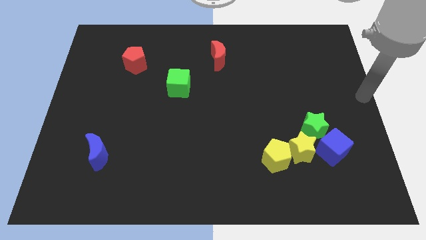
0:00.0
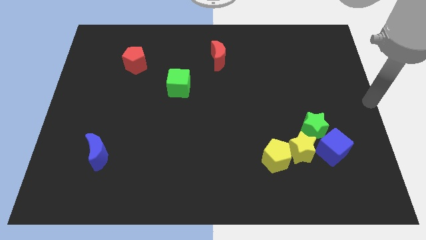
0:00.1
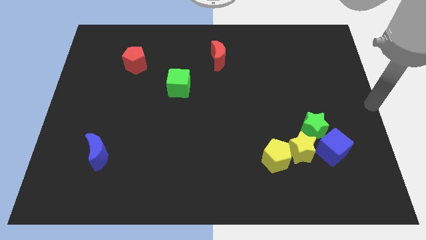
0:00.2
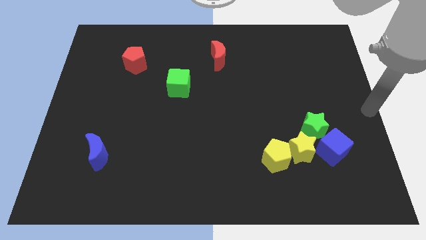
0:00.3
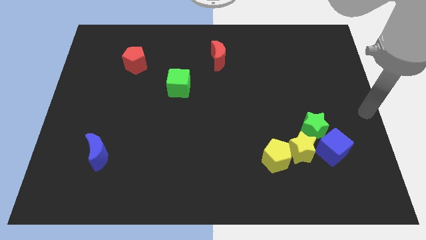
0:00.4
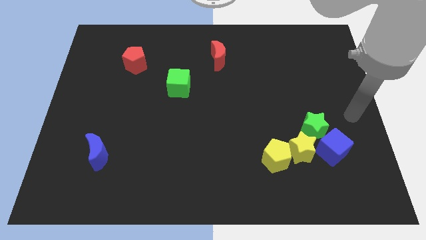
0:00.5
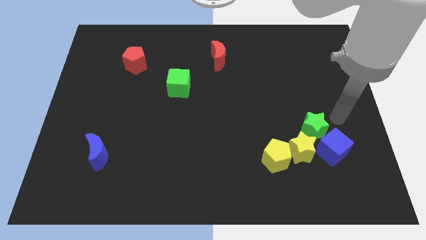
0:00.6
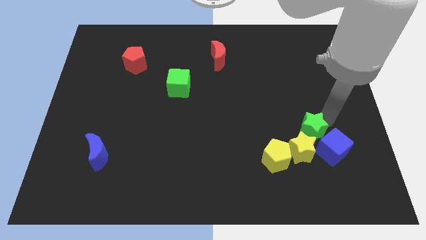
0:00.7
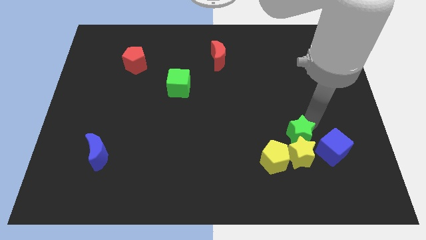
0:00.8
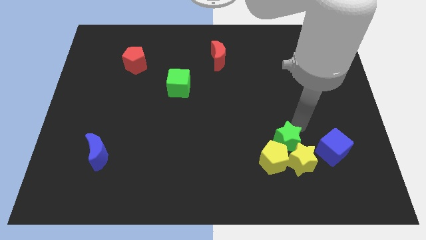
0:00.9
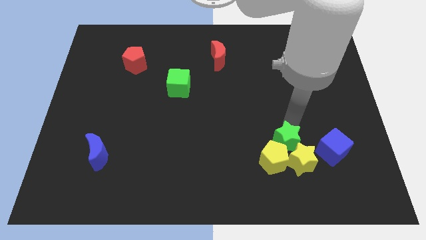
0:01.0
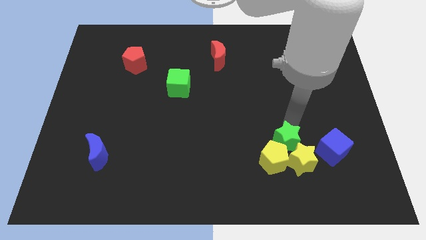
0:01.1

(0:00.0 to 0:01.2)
push the green star into the yellow blocks

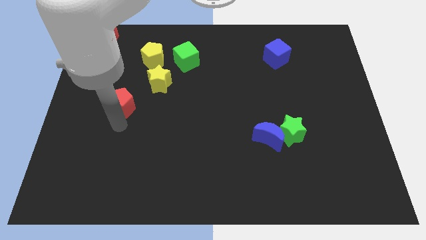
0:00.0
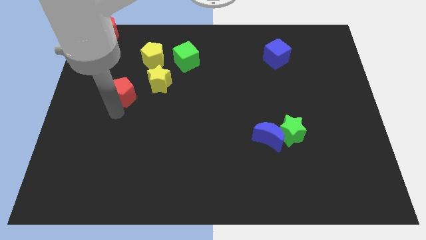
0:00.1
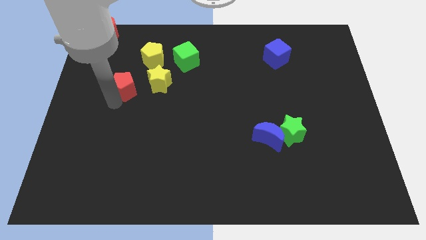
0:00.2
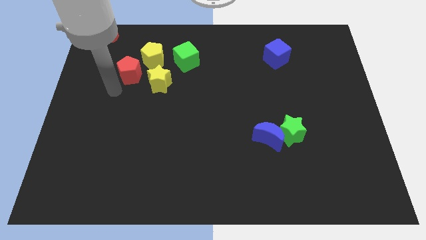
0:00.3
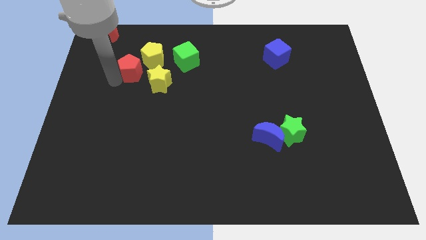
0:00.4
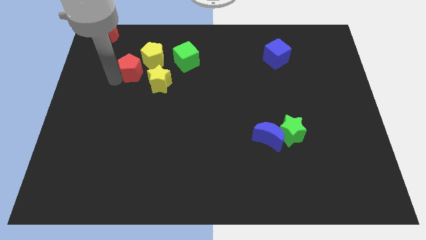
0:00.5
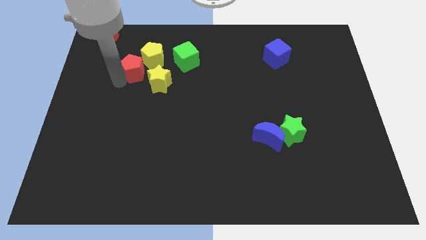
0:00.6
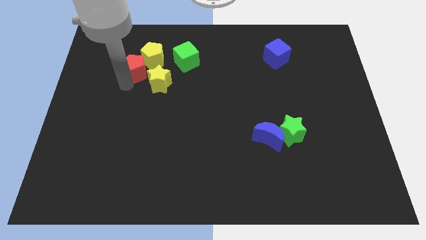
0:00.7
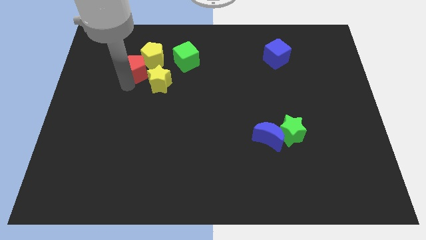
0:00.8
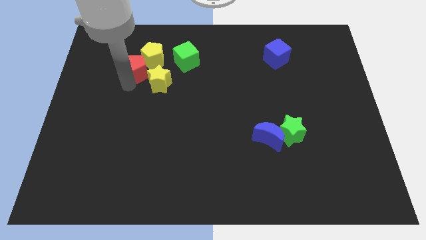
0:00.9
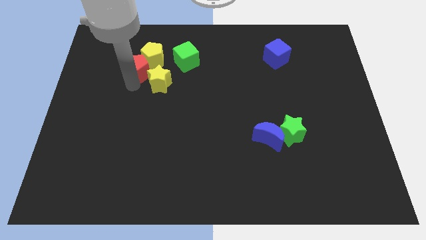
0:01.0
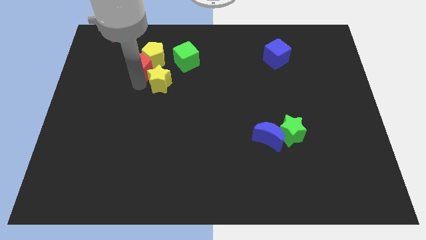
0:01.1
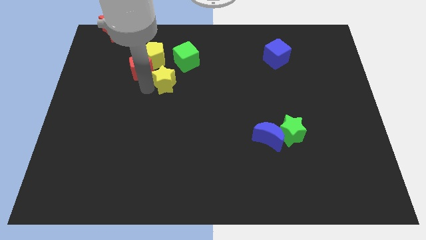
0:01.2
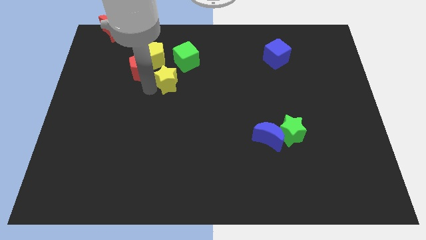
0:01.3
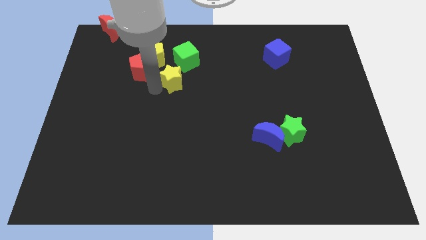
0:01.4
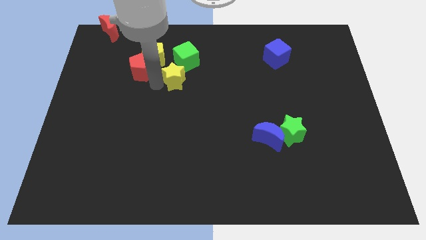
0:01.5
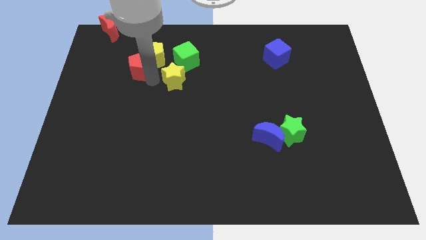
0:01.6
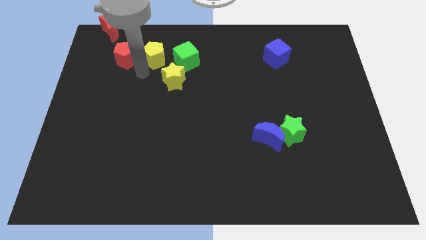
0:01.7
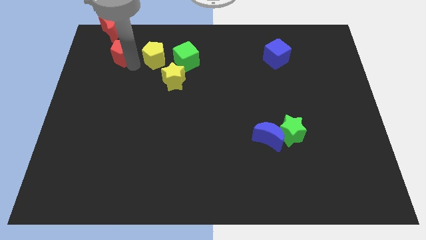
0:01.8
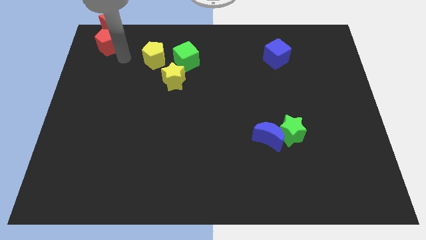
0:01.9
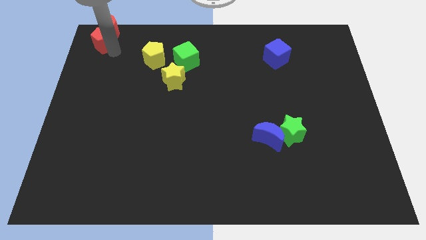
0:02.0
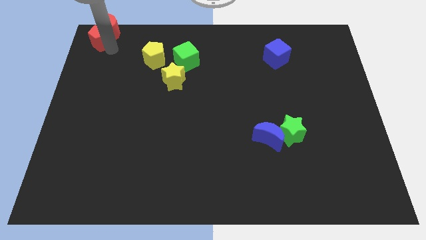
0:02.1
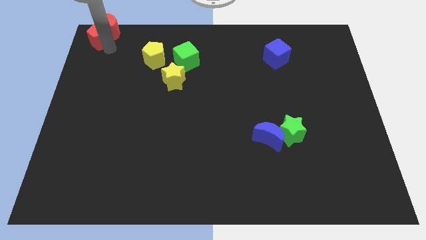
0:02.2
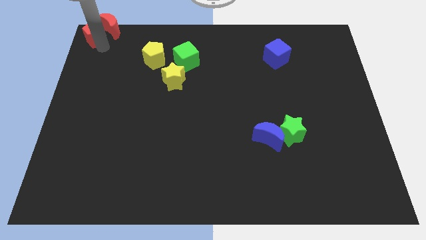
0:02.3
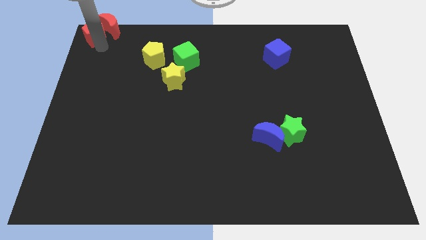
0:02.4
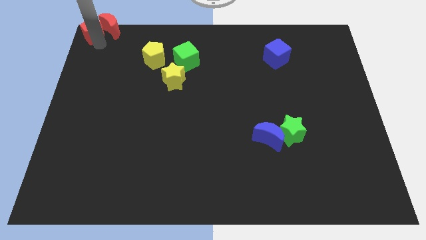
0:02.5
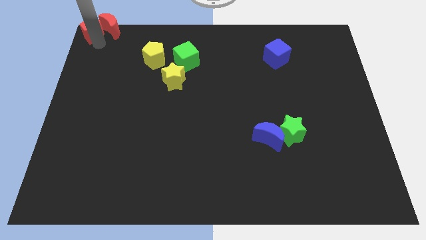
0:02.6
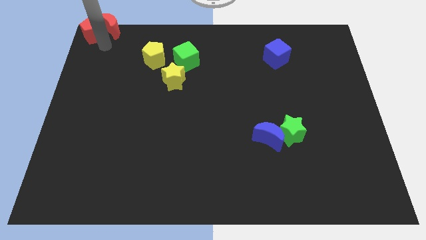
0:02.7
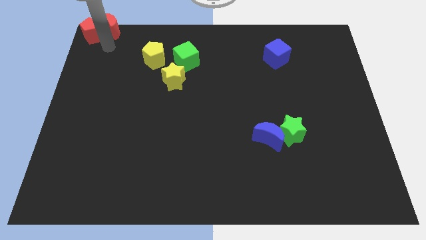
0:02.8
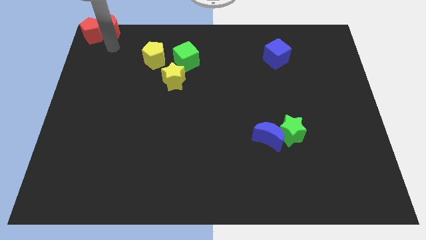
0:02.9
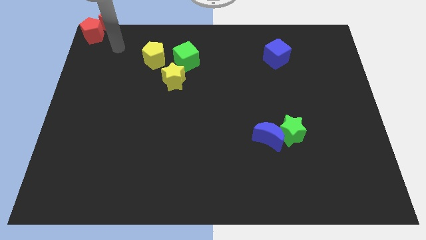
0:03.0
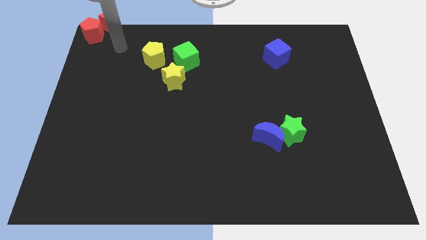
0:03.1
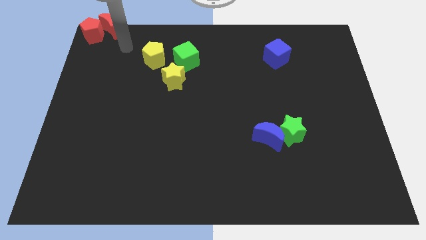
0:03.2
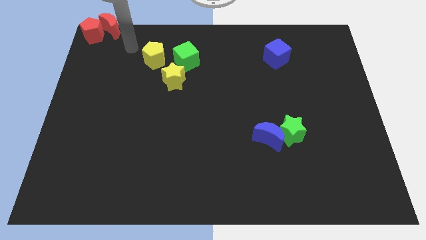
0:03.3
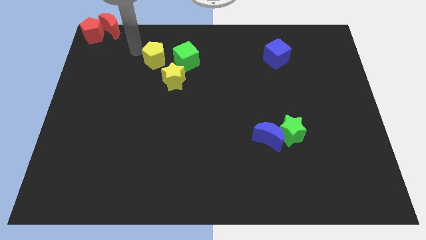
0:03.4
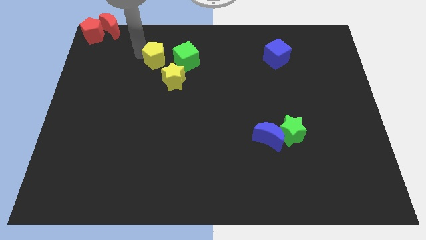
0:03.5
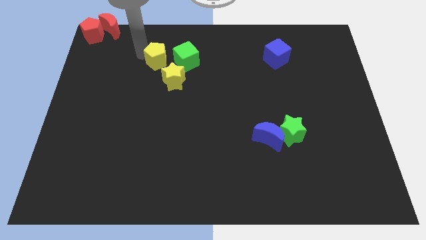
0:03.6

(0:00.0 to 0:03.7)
place red pentagon to the top left corner of the board

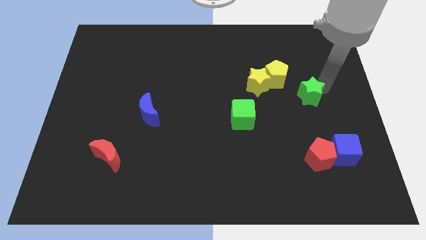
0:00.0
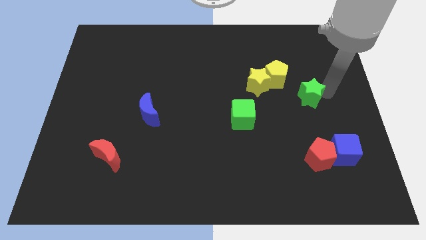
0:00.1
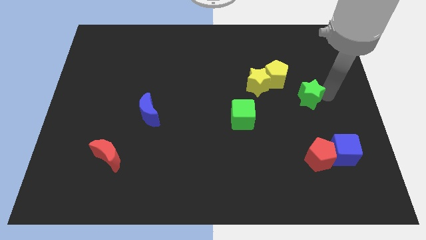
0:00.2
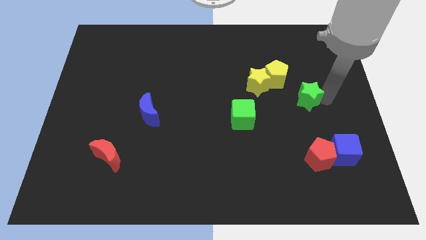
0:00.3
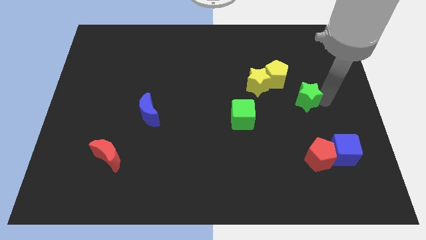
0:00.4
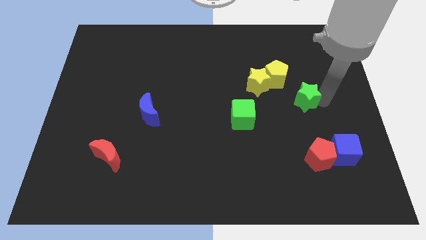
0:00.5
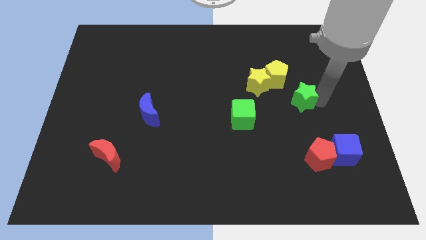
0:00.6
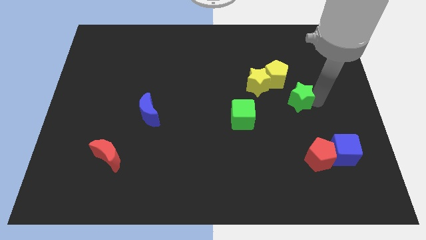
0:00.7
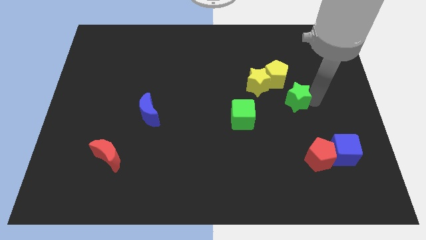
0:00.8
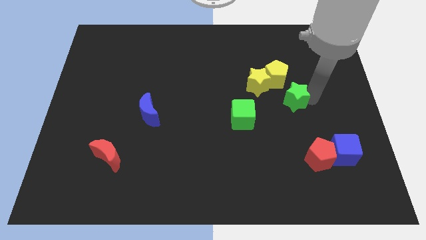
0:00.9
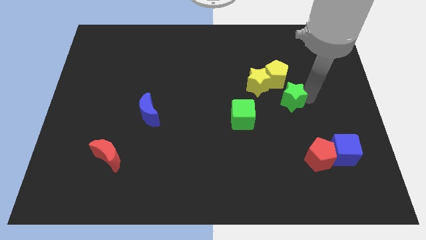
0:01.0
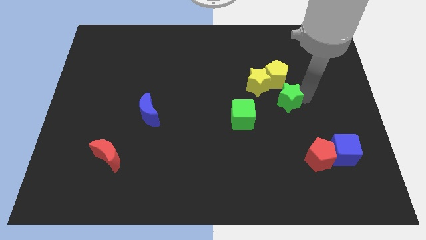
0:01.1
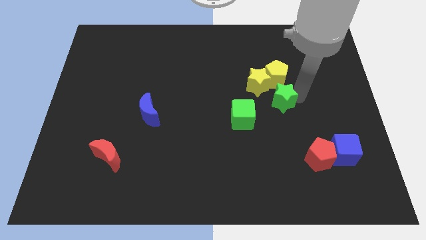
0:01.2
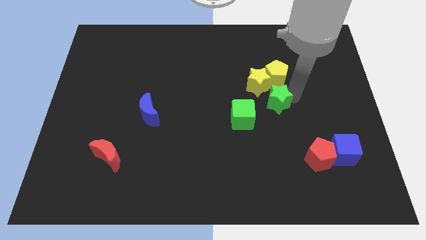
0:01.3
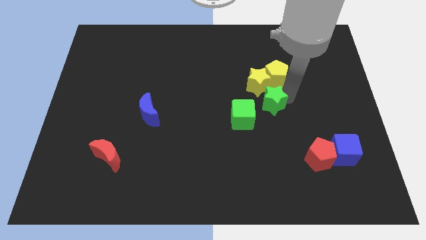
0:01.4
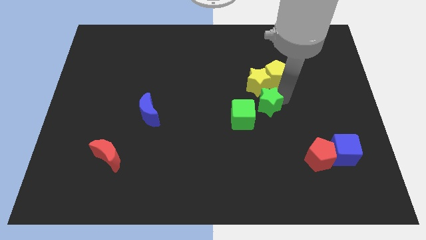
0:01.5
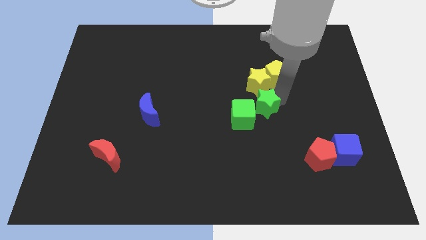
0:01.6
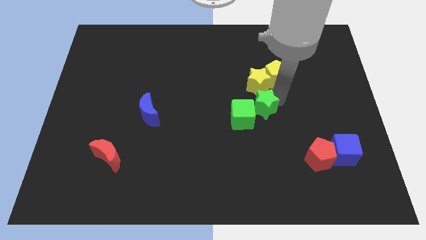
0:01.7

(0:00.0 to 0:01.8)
push the green star towards the right of the green cube

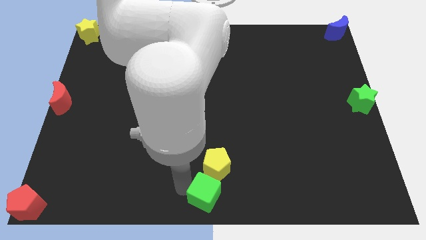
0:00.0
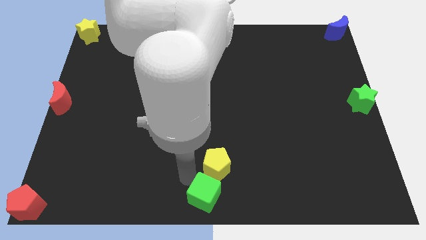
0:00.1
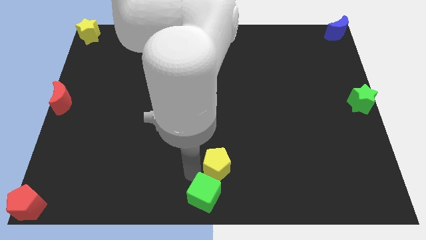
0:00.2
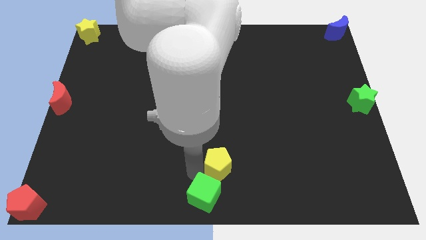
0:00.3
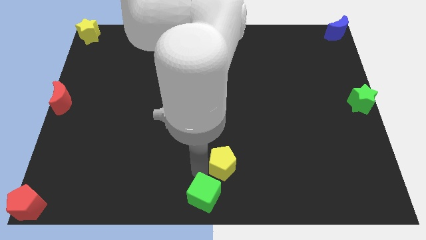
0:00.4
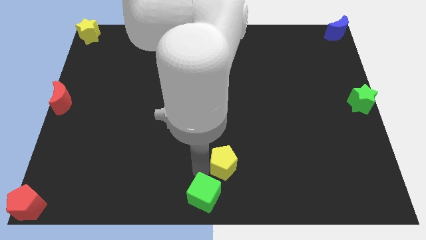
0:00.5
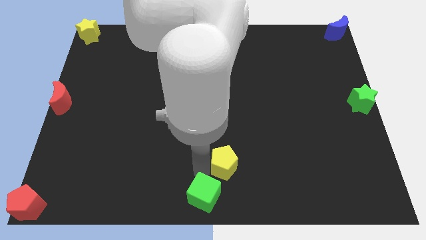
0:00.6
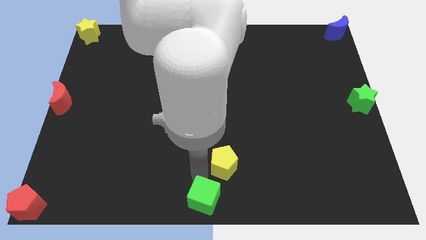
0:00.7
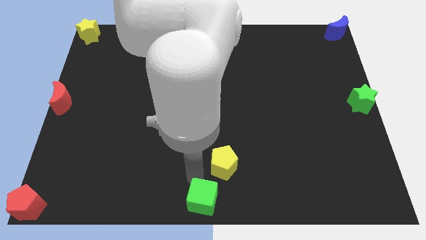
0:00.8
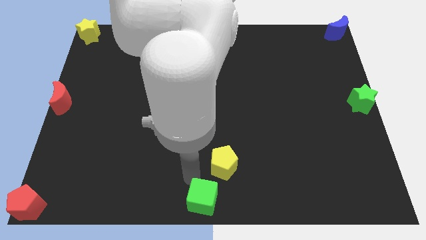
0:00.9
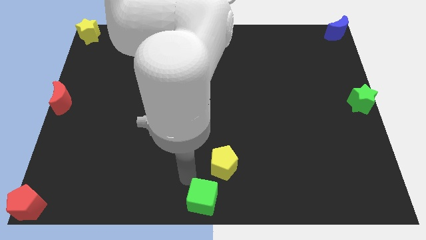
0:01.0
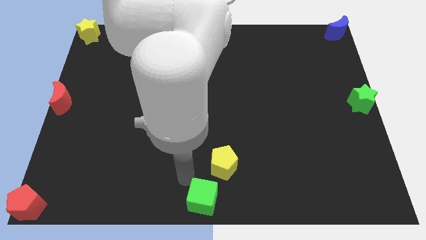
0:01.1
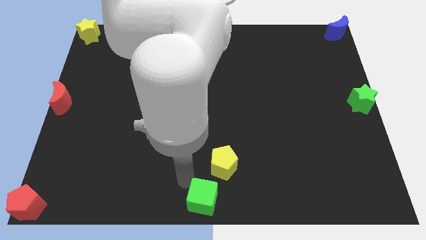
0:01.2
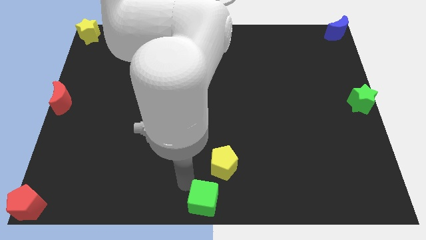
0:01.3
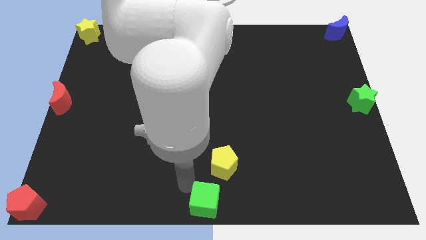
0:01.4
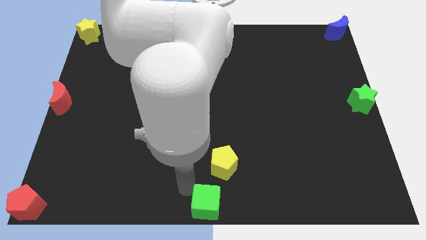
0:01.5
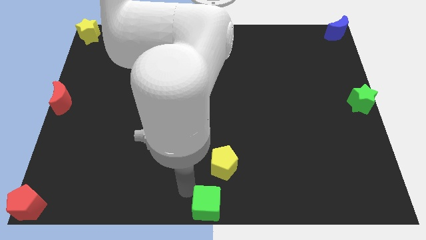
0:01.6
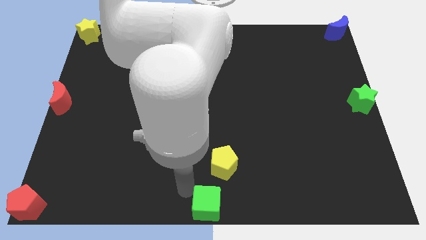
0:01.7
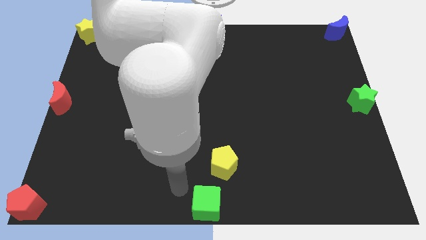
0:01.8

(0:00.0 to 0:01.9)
put the green cube at the bottom center of the board

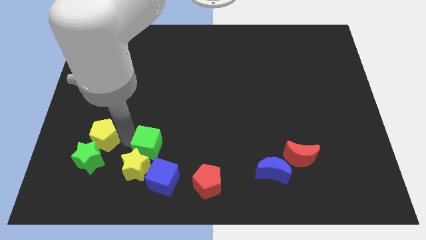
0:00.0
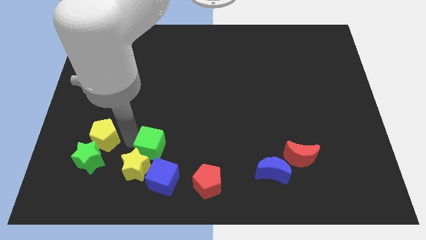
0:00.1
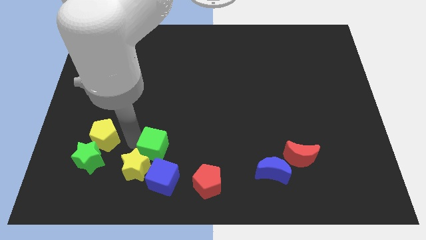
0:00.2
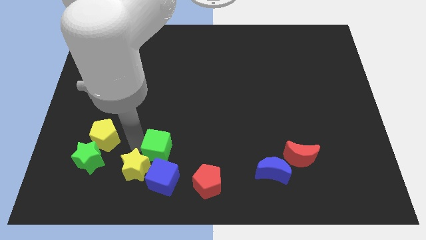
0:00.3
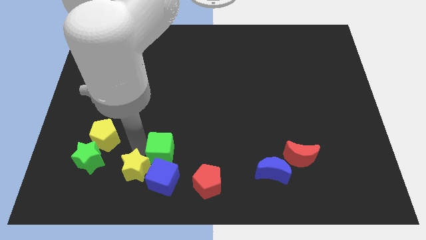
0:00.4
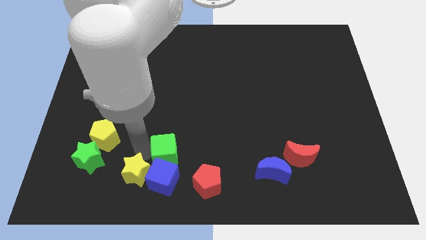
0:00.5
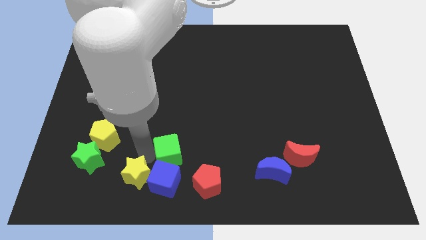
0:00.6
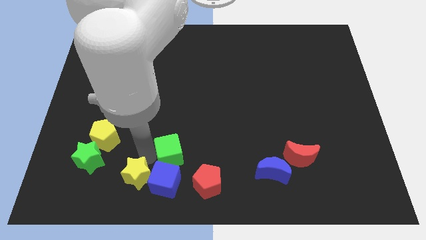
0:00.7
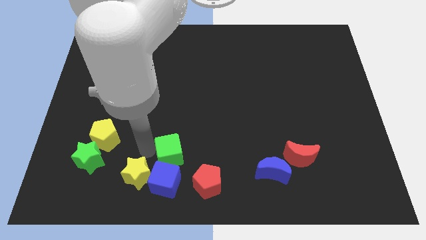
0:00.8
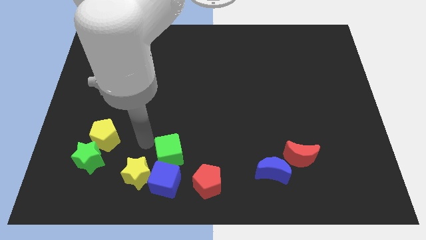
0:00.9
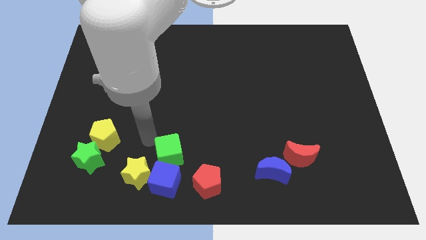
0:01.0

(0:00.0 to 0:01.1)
move the green cube on top of blue cube
